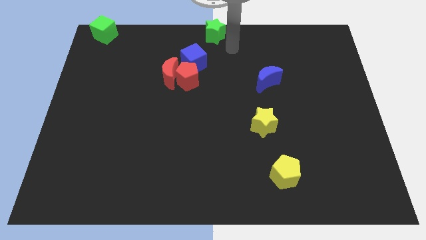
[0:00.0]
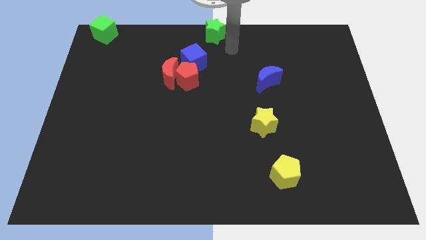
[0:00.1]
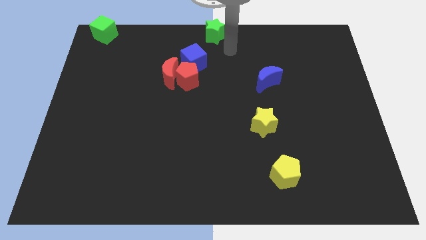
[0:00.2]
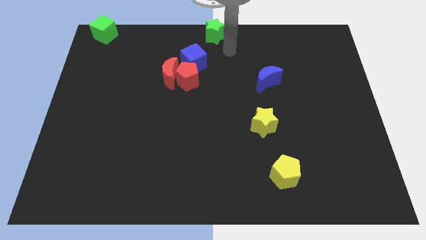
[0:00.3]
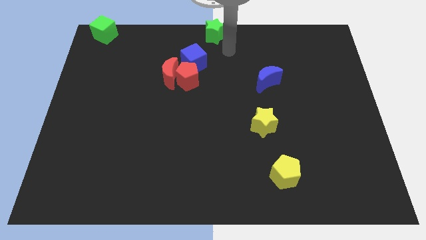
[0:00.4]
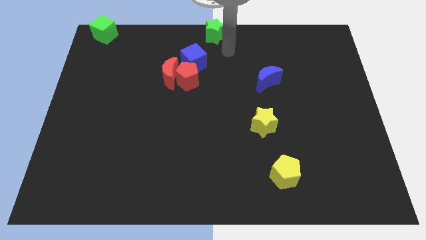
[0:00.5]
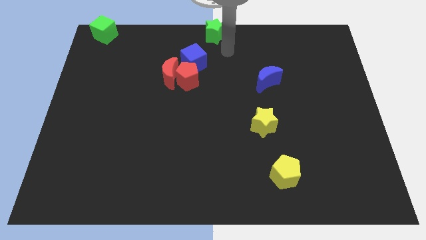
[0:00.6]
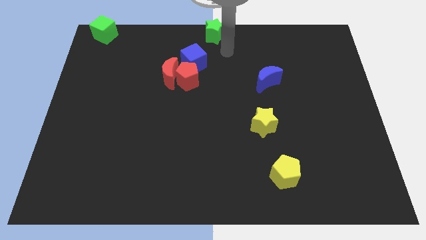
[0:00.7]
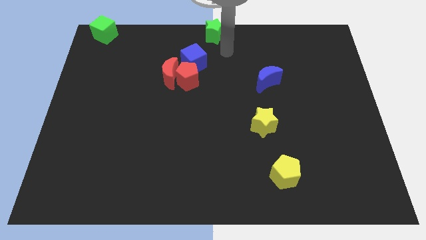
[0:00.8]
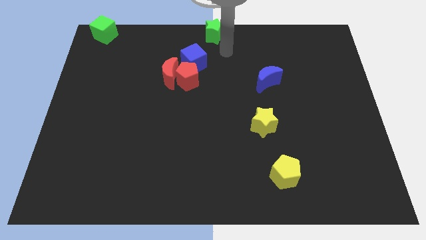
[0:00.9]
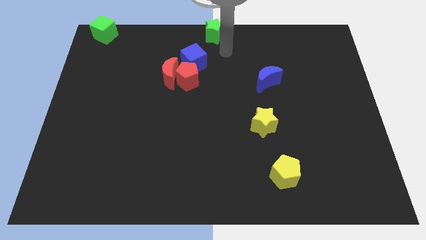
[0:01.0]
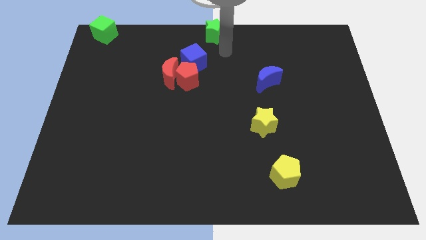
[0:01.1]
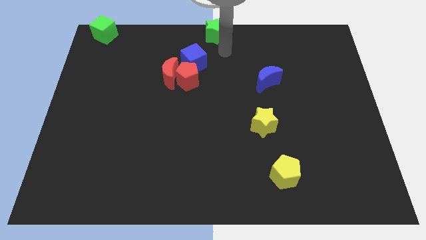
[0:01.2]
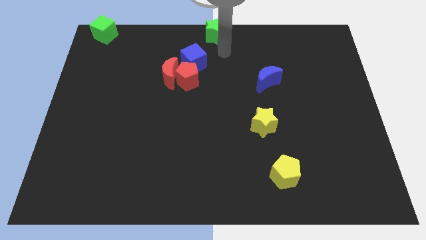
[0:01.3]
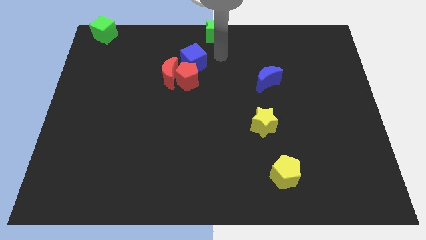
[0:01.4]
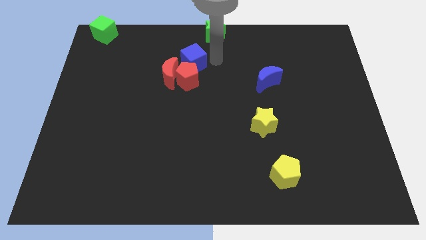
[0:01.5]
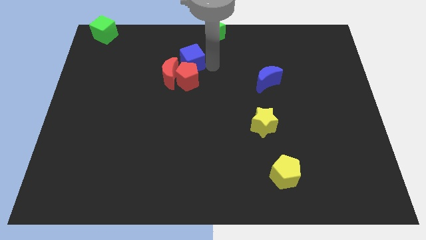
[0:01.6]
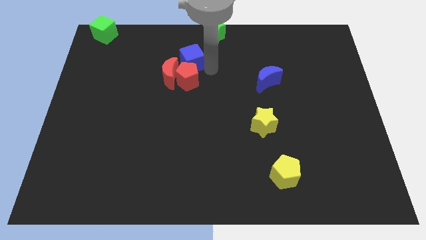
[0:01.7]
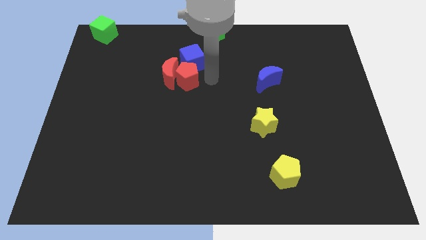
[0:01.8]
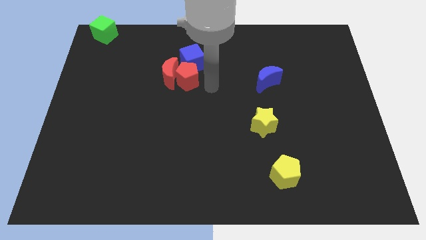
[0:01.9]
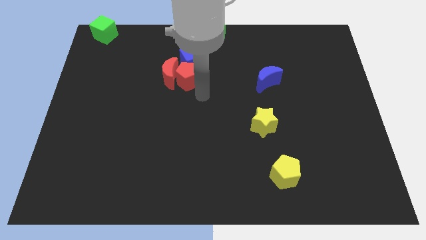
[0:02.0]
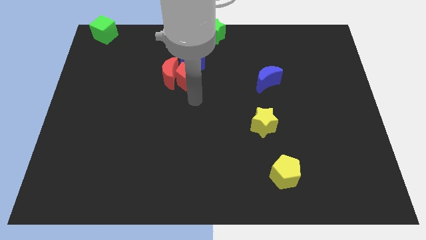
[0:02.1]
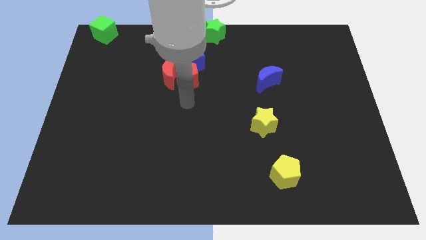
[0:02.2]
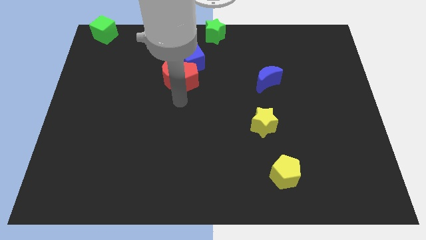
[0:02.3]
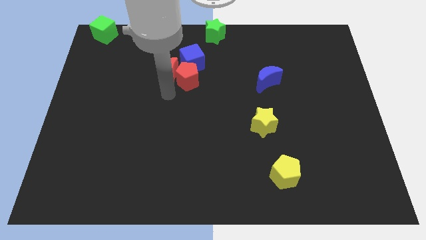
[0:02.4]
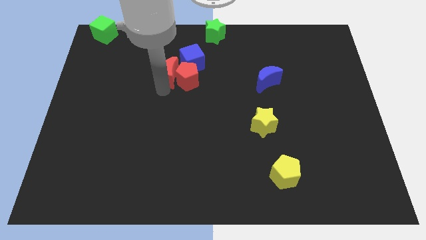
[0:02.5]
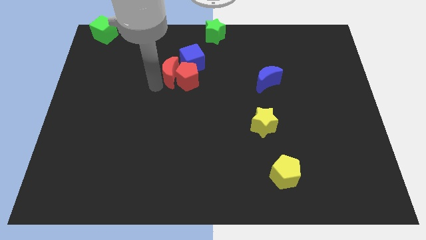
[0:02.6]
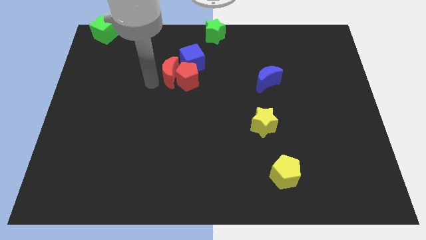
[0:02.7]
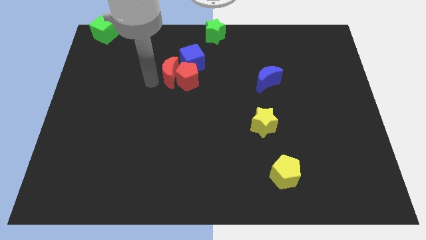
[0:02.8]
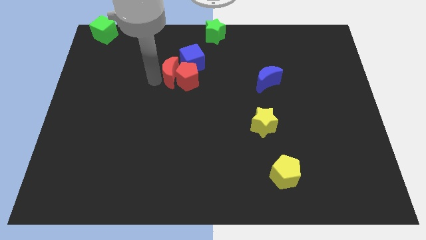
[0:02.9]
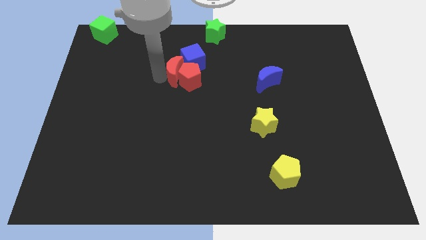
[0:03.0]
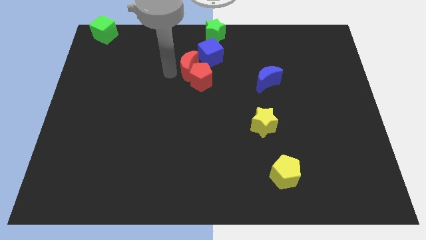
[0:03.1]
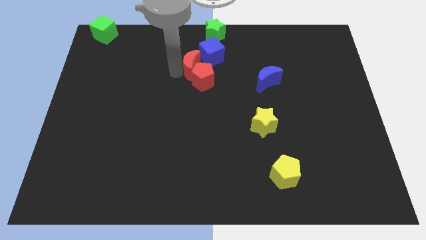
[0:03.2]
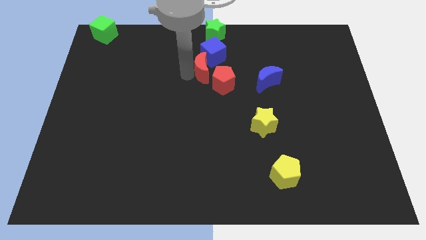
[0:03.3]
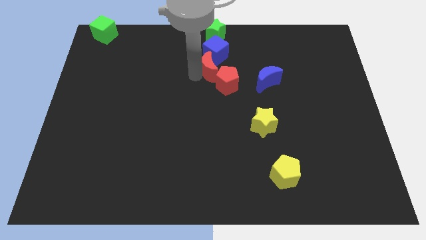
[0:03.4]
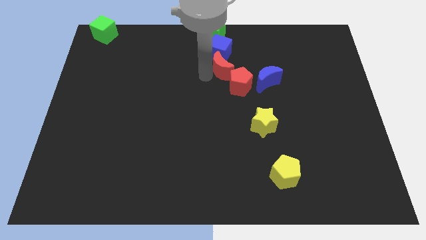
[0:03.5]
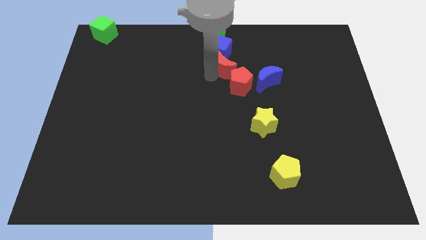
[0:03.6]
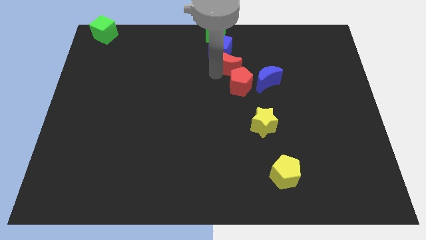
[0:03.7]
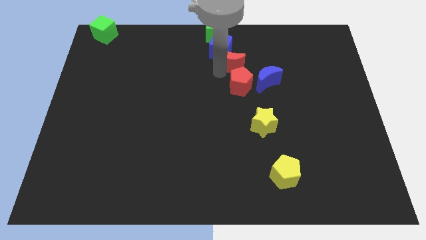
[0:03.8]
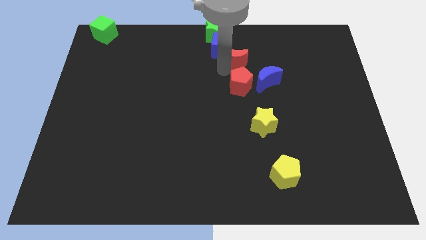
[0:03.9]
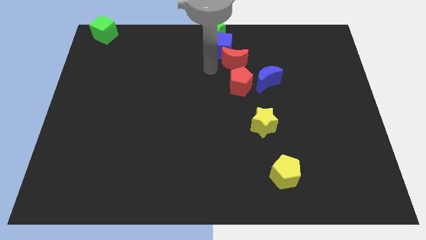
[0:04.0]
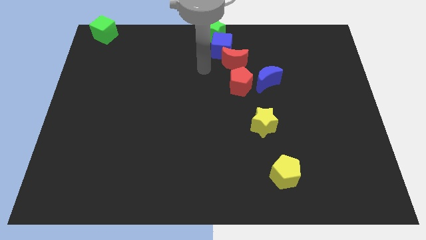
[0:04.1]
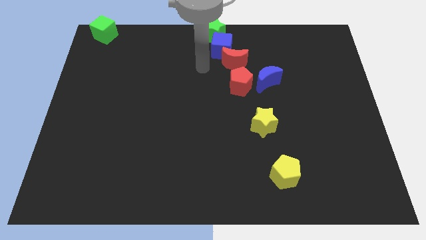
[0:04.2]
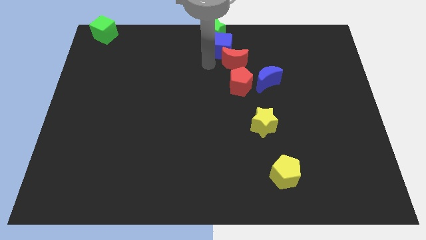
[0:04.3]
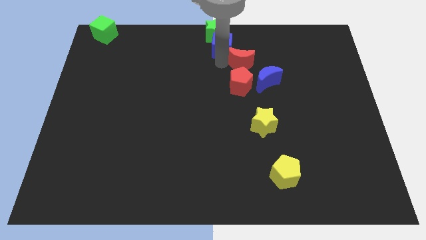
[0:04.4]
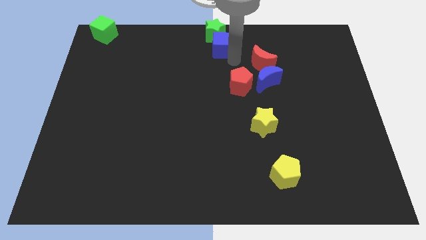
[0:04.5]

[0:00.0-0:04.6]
push the red moon to the top of the blue crescent

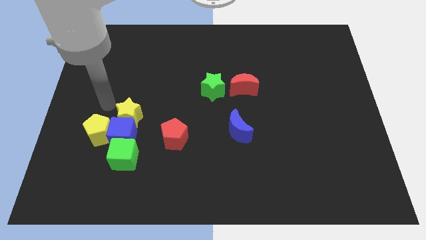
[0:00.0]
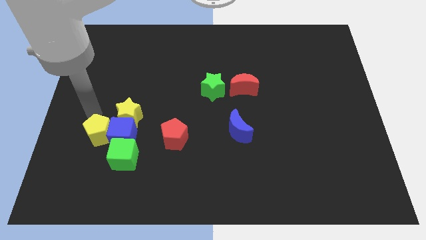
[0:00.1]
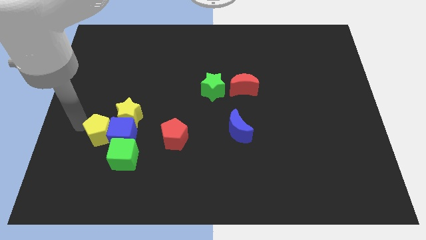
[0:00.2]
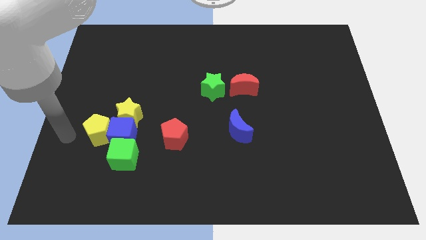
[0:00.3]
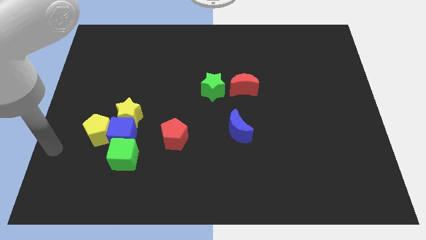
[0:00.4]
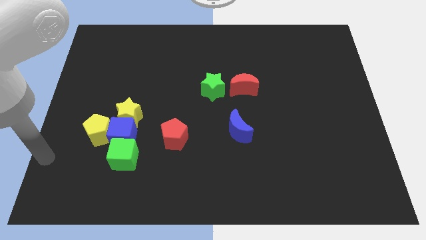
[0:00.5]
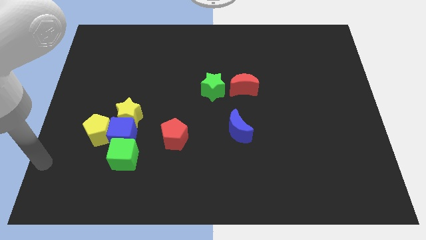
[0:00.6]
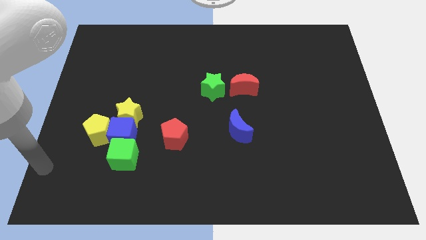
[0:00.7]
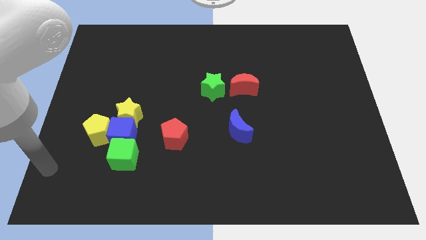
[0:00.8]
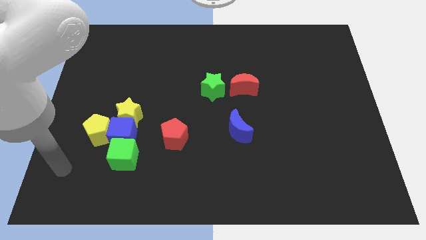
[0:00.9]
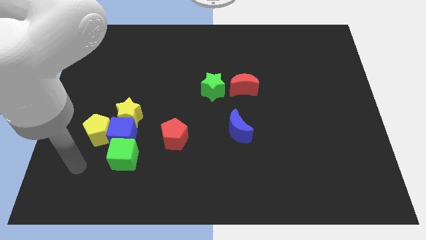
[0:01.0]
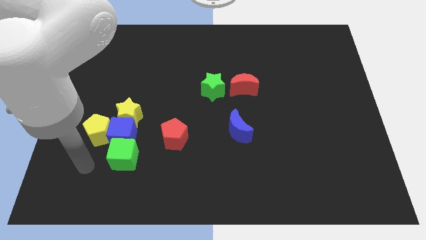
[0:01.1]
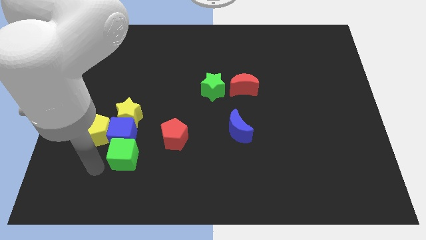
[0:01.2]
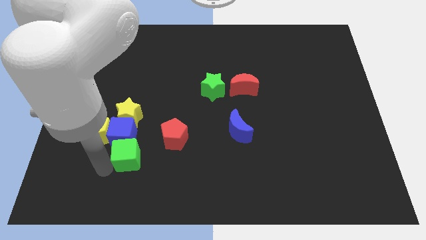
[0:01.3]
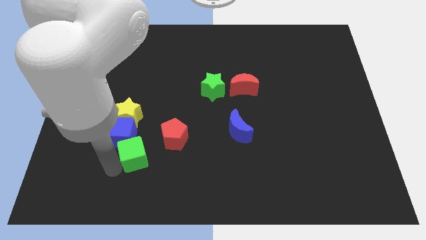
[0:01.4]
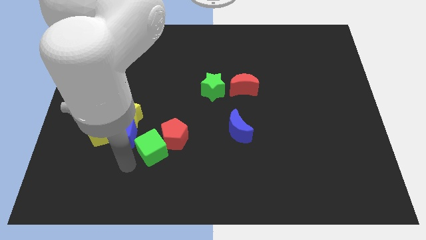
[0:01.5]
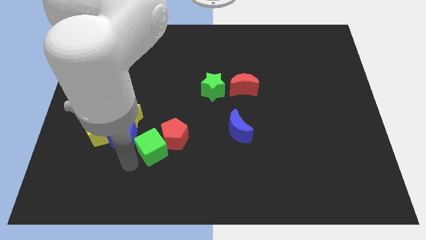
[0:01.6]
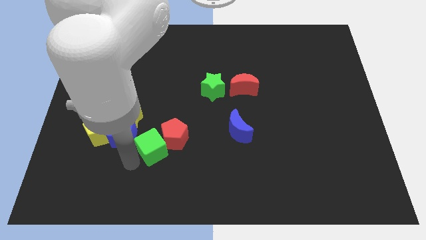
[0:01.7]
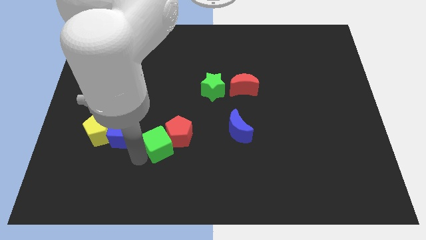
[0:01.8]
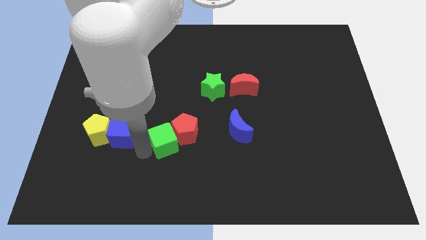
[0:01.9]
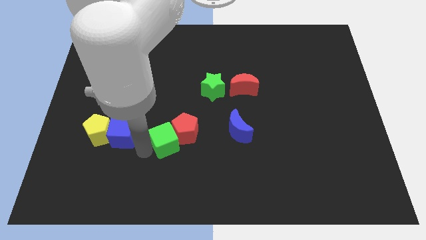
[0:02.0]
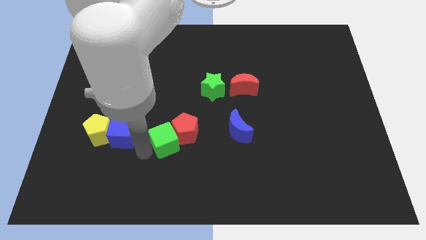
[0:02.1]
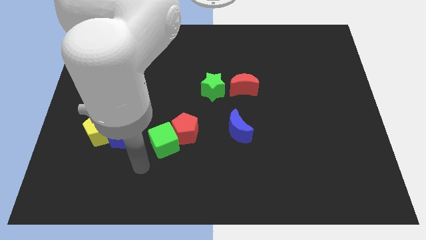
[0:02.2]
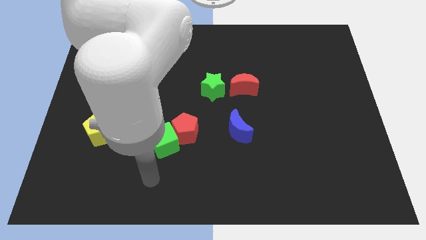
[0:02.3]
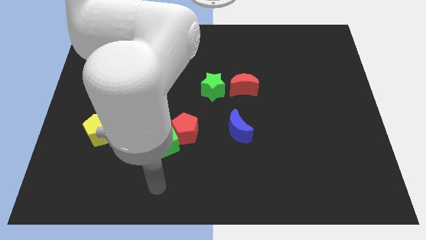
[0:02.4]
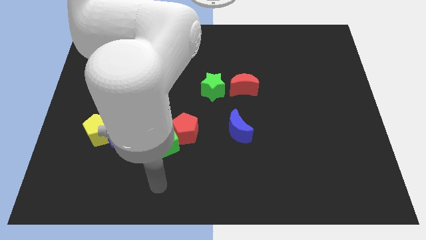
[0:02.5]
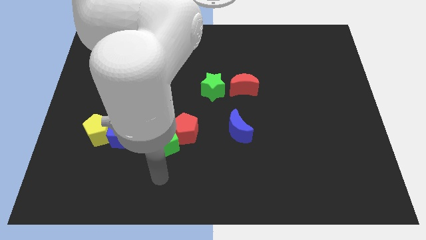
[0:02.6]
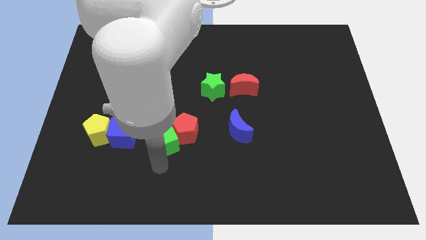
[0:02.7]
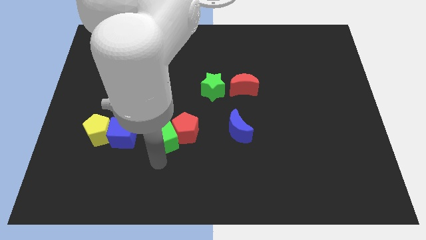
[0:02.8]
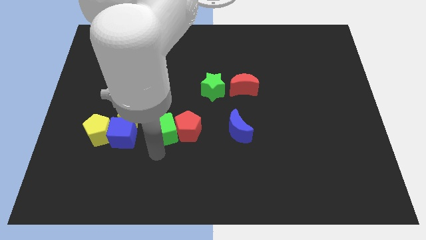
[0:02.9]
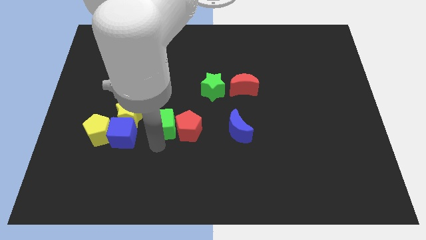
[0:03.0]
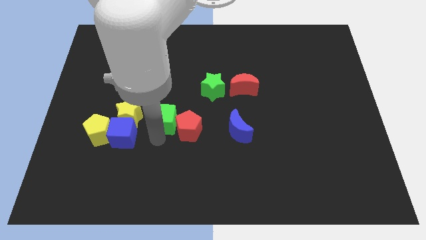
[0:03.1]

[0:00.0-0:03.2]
slide the green cube parallel left to the red pentagon

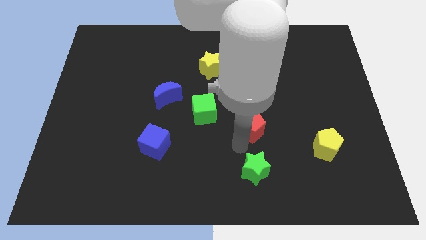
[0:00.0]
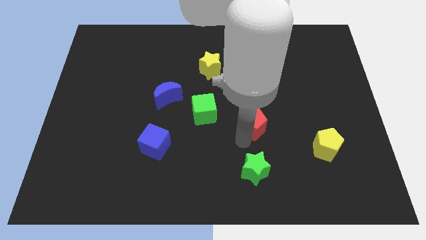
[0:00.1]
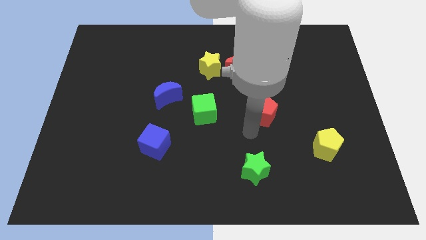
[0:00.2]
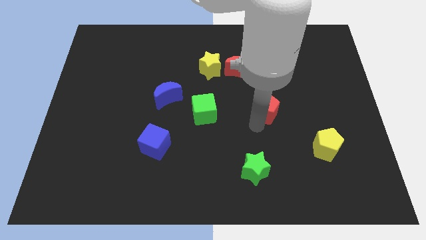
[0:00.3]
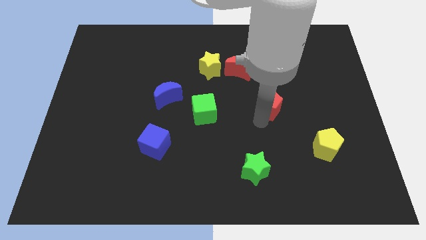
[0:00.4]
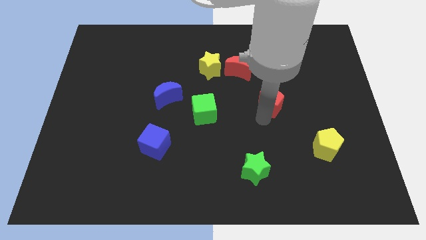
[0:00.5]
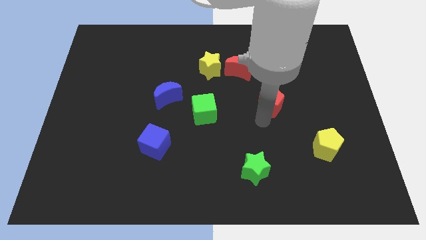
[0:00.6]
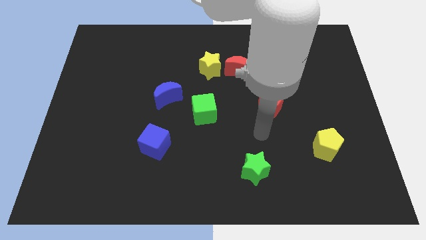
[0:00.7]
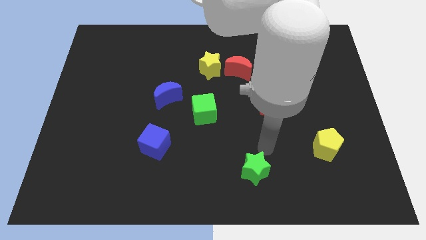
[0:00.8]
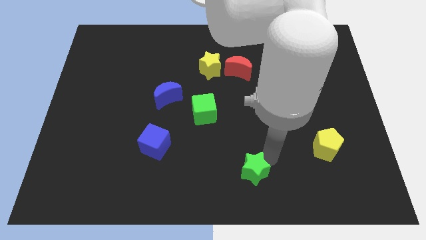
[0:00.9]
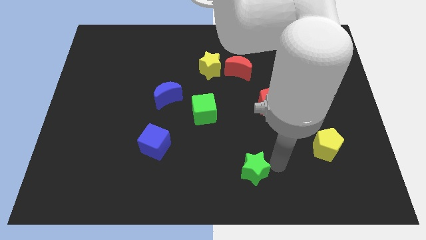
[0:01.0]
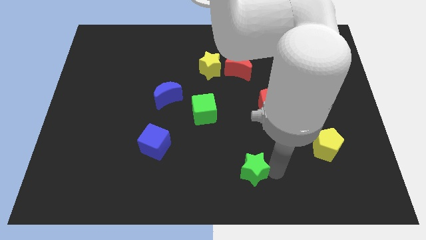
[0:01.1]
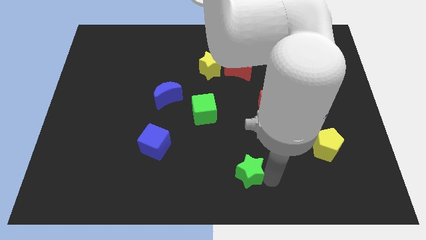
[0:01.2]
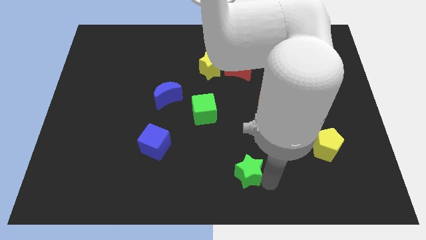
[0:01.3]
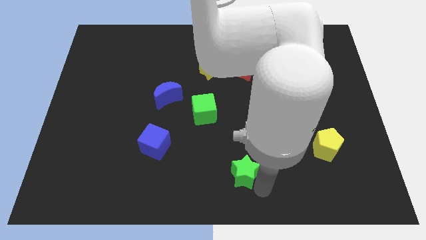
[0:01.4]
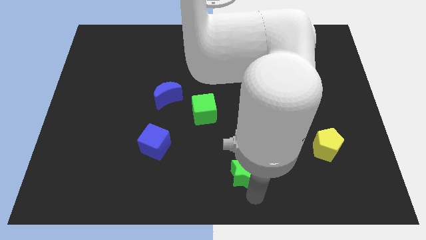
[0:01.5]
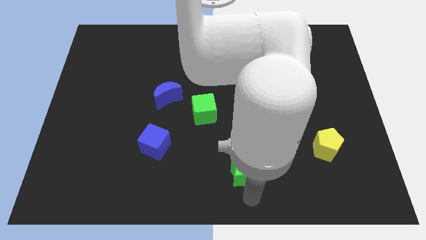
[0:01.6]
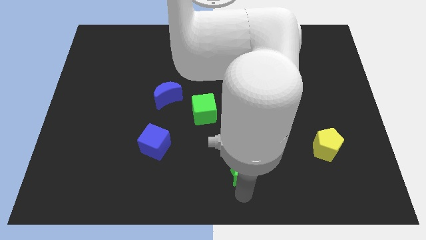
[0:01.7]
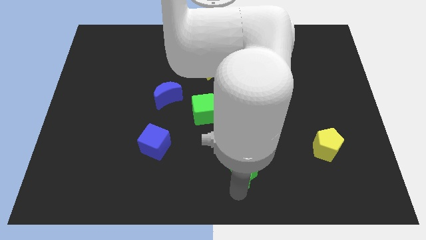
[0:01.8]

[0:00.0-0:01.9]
touch the bottom side of the green star
